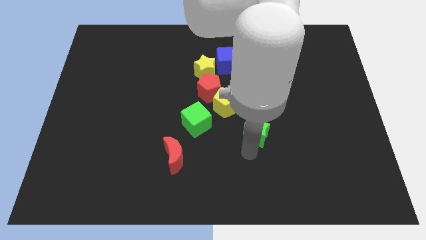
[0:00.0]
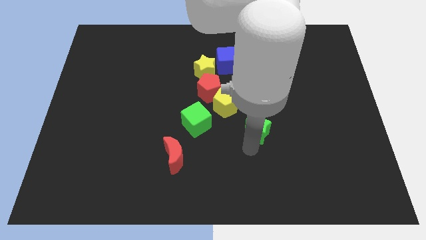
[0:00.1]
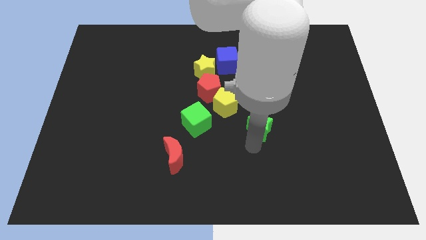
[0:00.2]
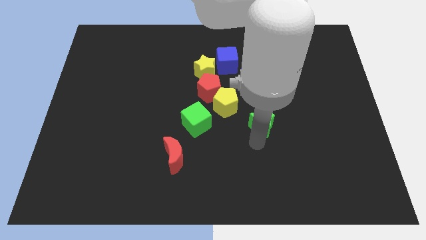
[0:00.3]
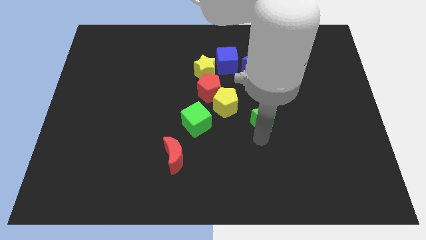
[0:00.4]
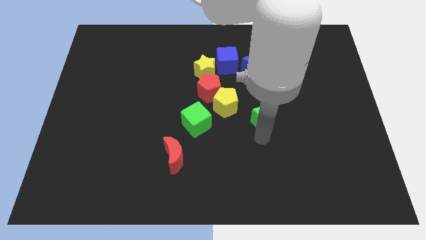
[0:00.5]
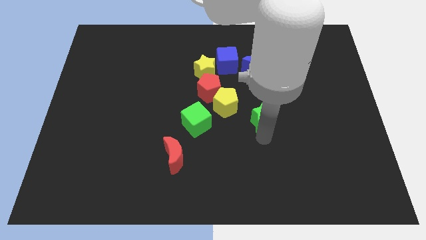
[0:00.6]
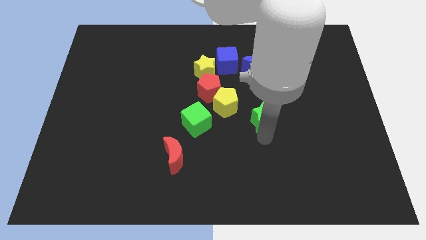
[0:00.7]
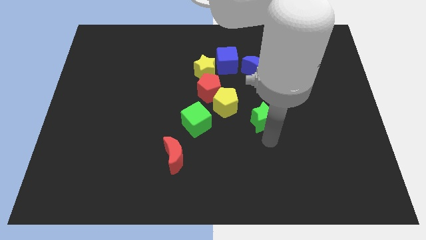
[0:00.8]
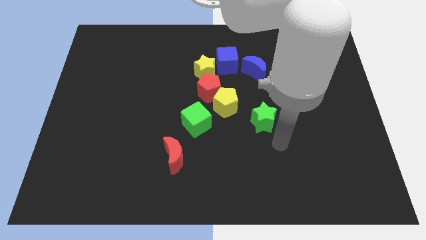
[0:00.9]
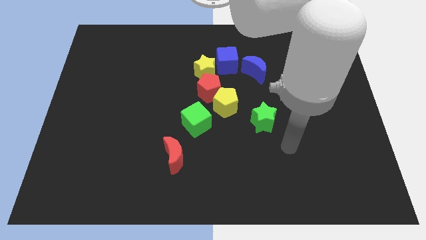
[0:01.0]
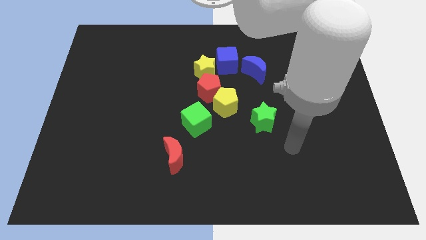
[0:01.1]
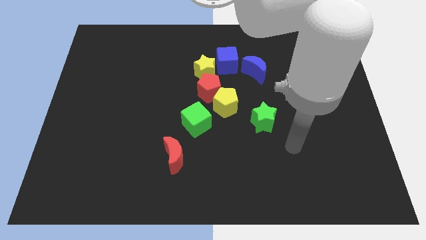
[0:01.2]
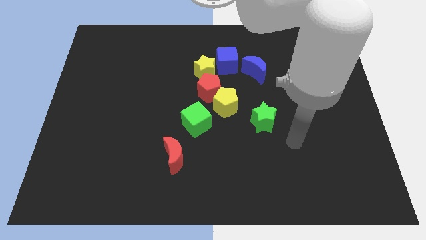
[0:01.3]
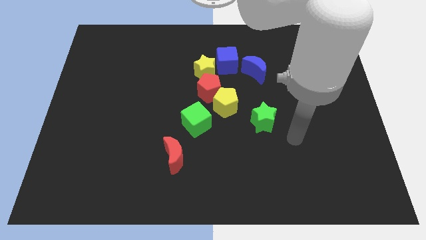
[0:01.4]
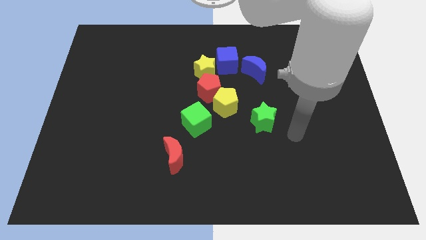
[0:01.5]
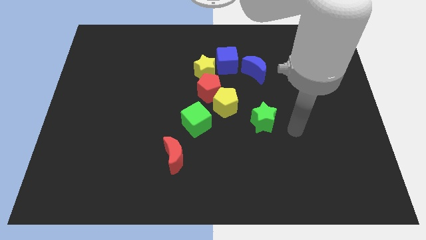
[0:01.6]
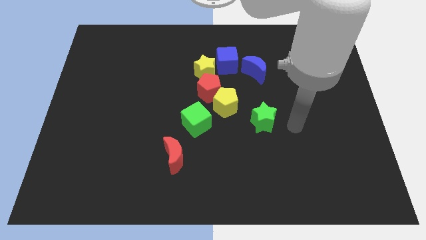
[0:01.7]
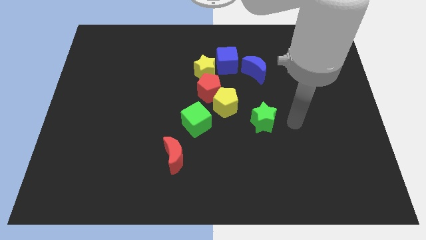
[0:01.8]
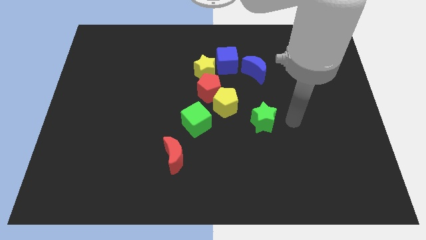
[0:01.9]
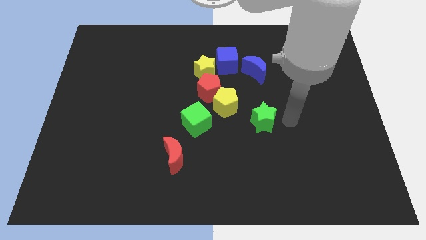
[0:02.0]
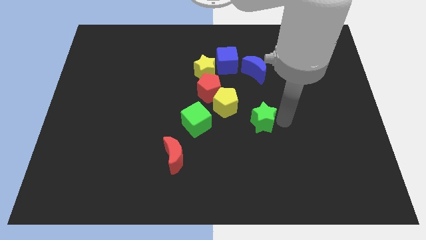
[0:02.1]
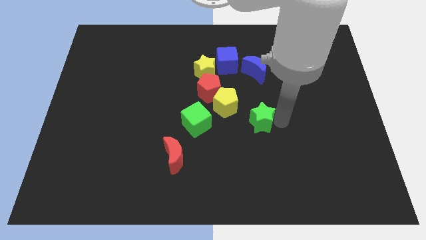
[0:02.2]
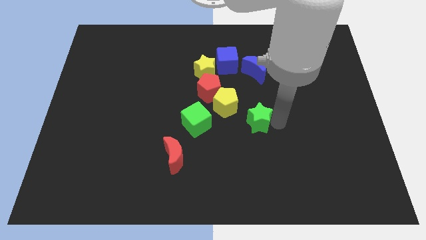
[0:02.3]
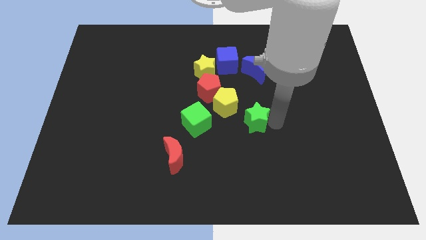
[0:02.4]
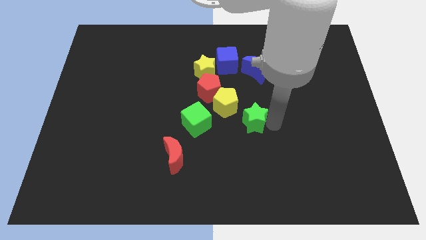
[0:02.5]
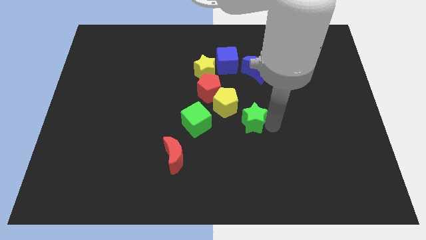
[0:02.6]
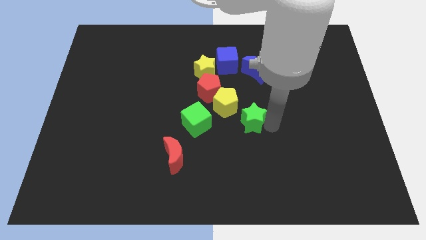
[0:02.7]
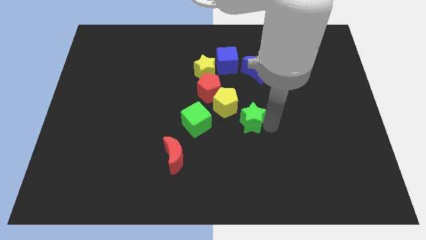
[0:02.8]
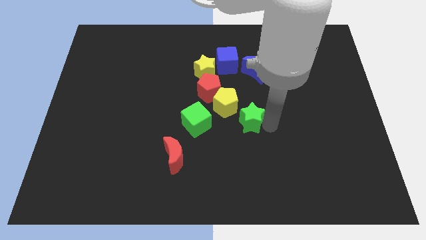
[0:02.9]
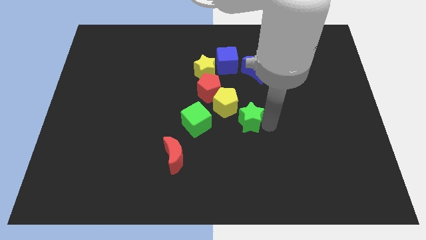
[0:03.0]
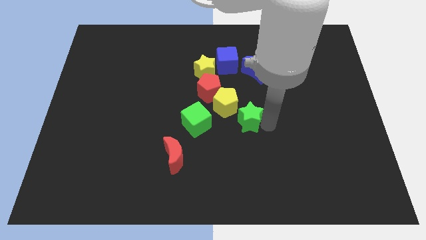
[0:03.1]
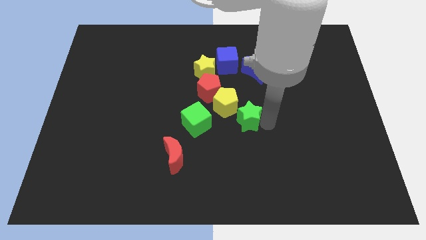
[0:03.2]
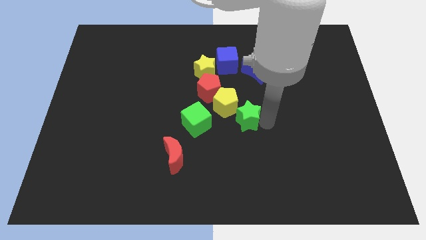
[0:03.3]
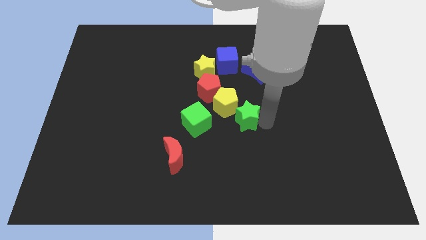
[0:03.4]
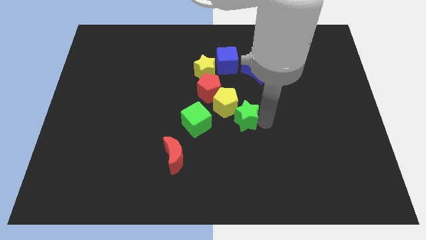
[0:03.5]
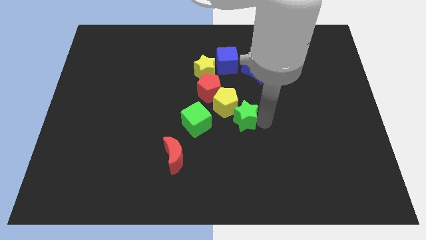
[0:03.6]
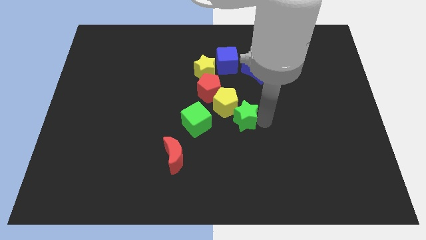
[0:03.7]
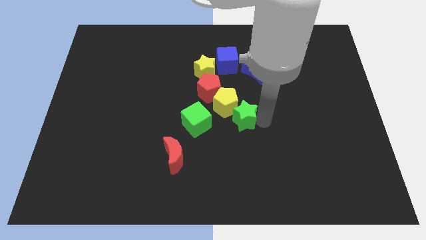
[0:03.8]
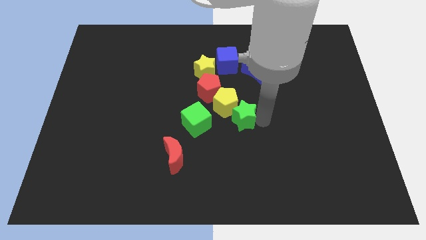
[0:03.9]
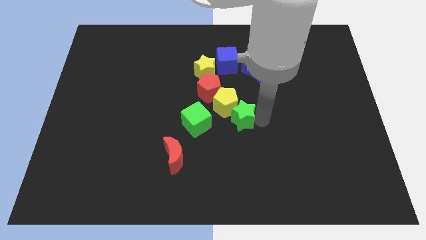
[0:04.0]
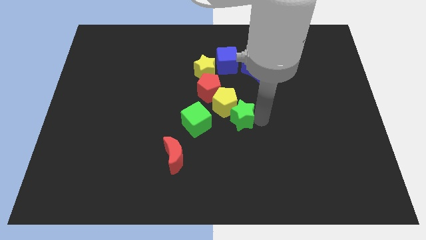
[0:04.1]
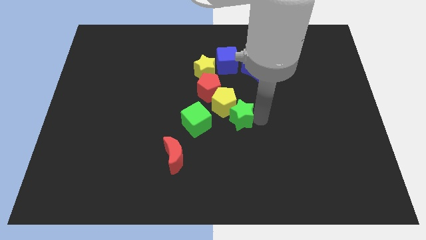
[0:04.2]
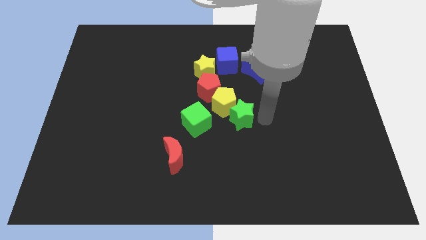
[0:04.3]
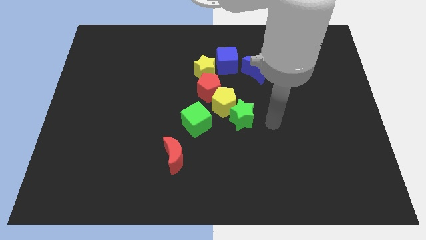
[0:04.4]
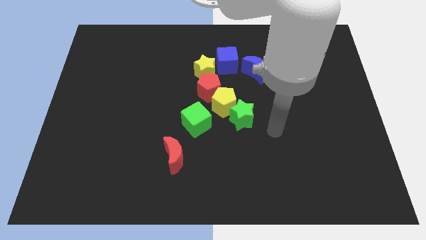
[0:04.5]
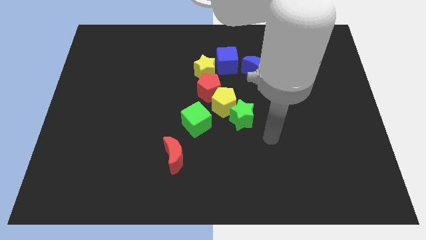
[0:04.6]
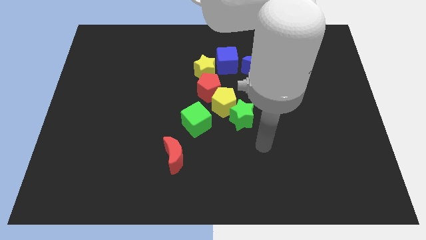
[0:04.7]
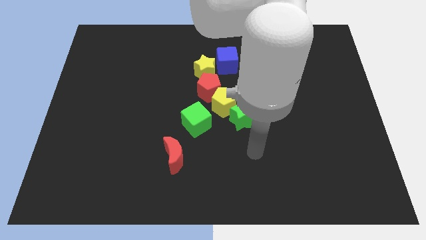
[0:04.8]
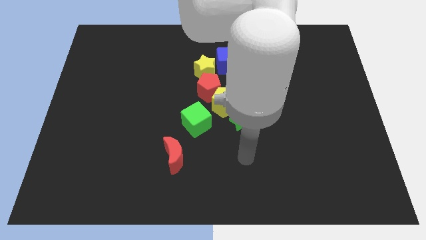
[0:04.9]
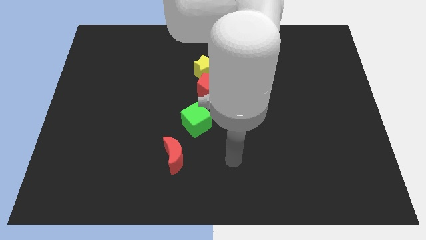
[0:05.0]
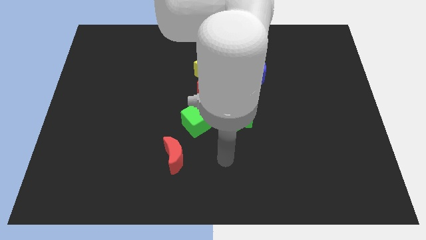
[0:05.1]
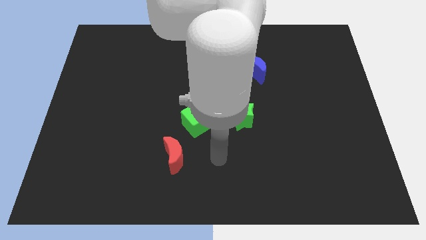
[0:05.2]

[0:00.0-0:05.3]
push the green star to the group of blocks

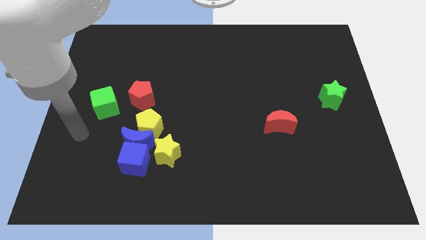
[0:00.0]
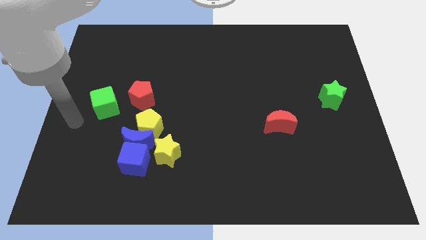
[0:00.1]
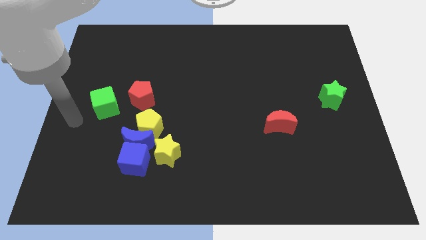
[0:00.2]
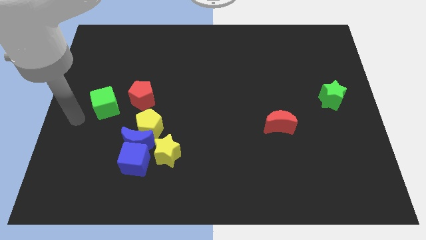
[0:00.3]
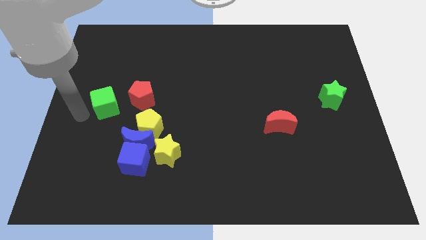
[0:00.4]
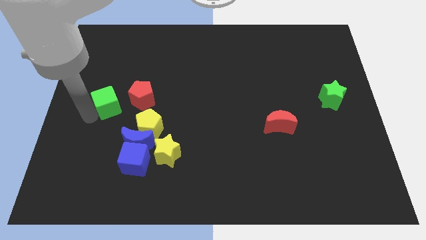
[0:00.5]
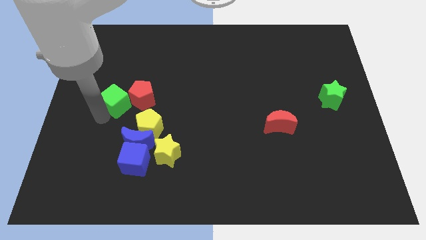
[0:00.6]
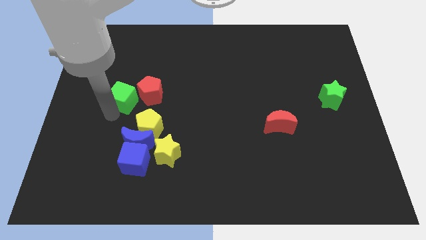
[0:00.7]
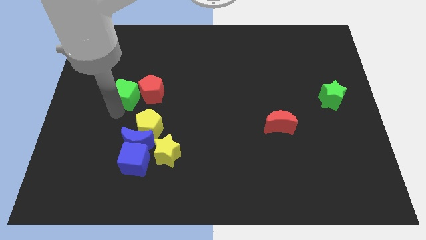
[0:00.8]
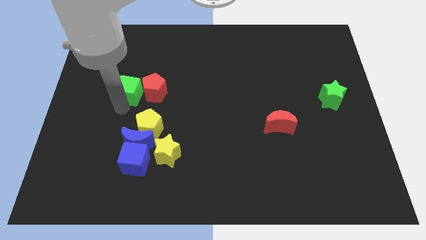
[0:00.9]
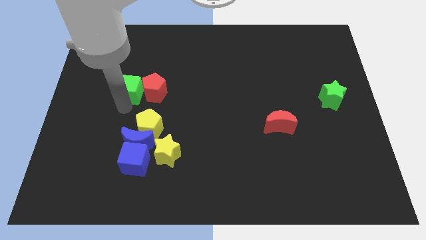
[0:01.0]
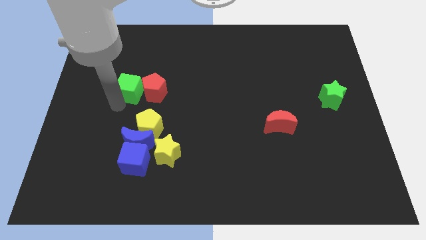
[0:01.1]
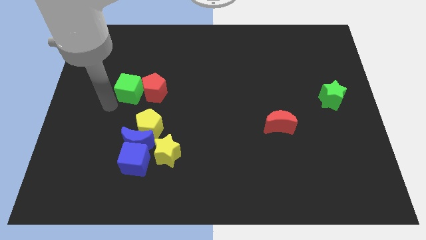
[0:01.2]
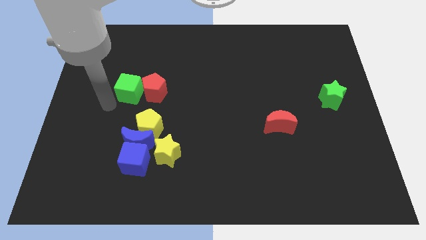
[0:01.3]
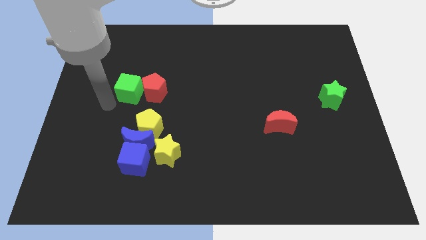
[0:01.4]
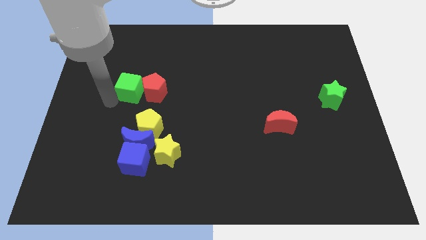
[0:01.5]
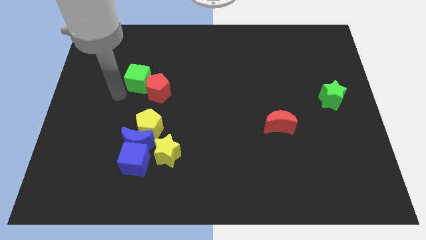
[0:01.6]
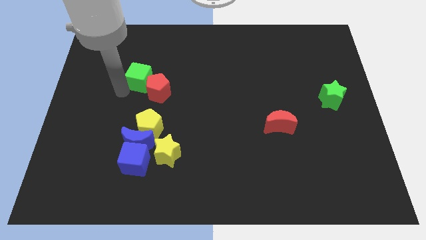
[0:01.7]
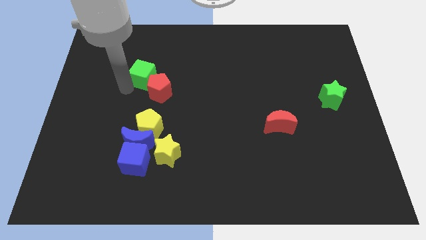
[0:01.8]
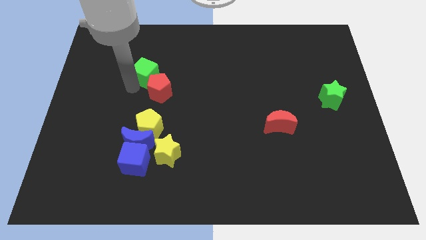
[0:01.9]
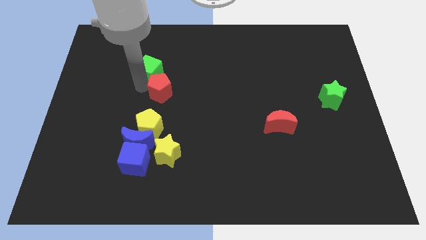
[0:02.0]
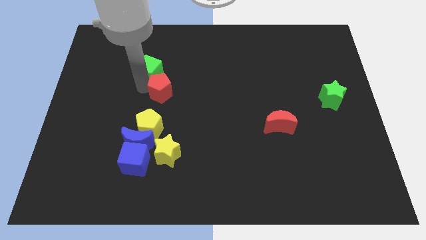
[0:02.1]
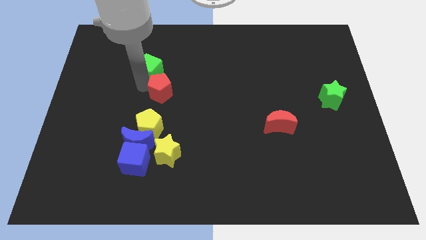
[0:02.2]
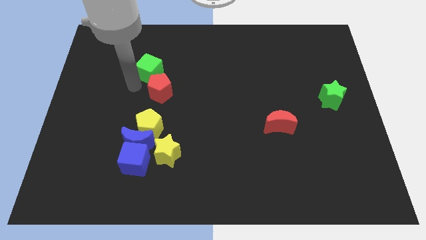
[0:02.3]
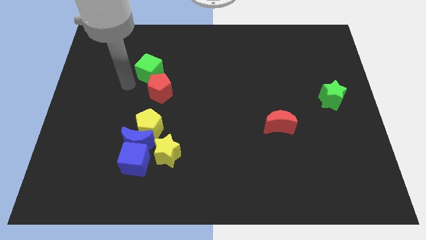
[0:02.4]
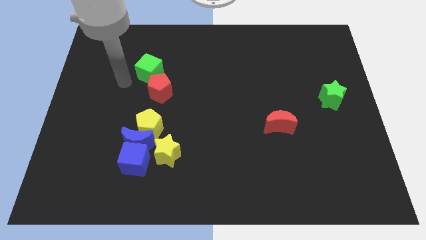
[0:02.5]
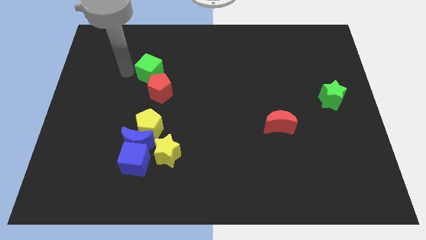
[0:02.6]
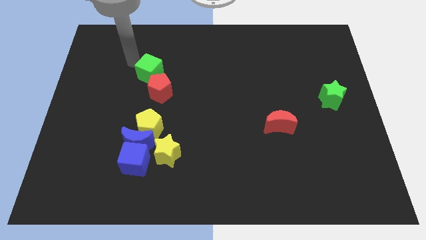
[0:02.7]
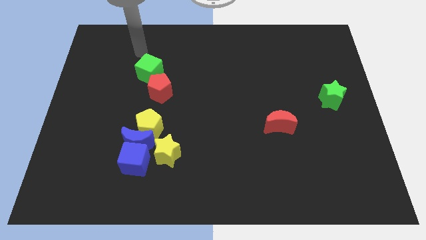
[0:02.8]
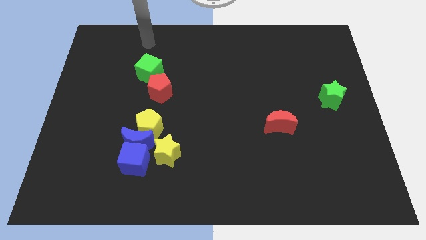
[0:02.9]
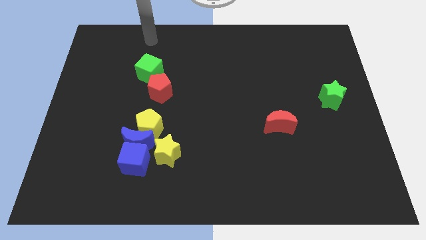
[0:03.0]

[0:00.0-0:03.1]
place the green cube and red pentagon at the top side of the yellow pentagon

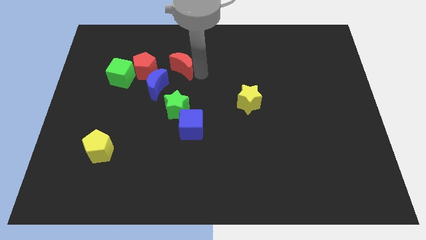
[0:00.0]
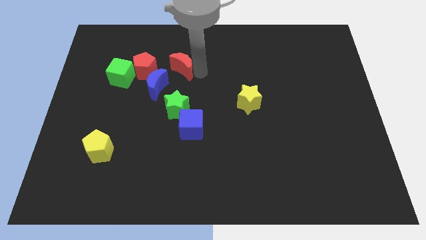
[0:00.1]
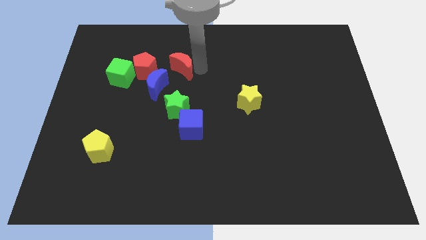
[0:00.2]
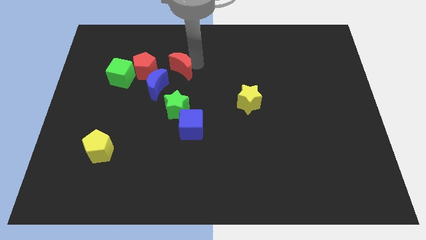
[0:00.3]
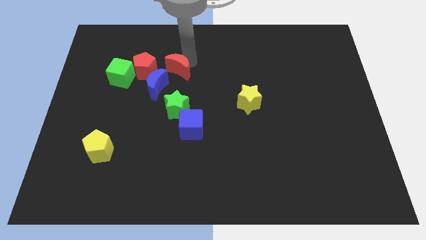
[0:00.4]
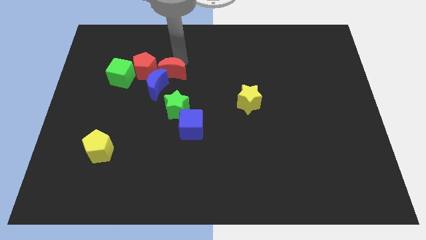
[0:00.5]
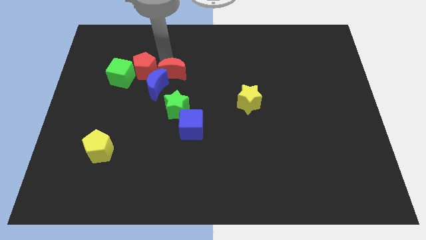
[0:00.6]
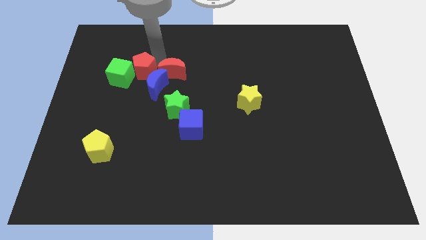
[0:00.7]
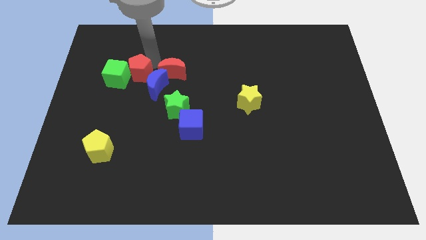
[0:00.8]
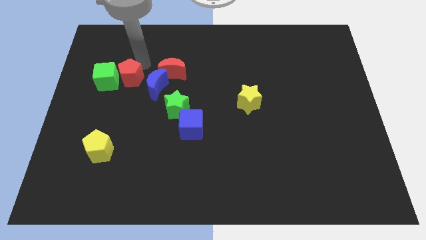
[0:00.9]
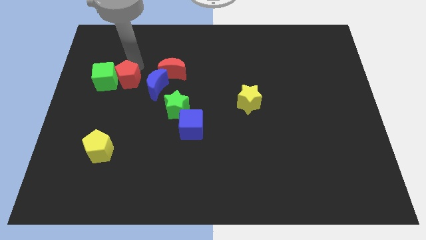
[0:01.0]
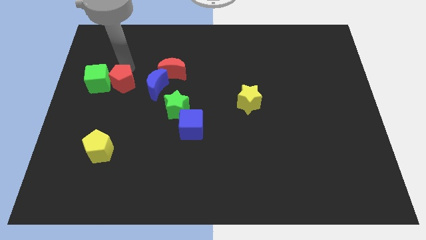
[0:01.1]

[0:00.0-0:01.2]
separate the red pentagon and red moon
